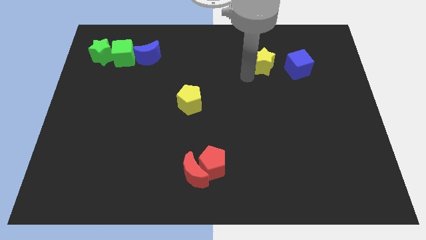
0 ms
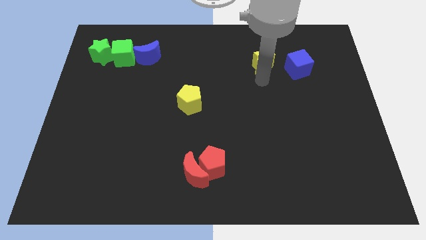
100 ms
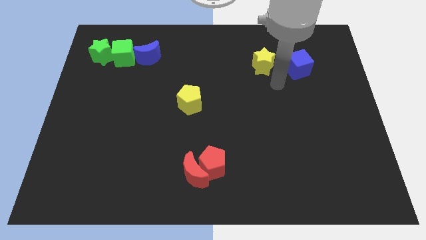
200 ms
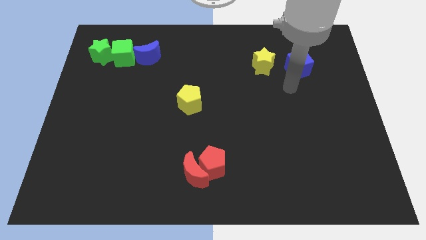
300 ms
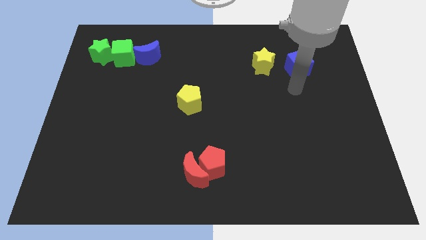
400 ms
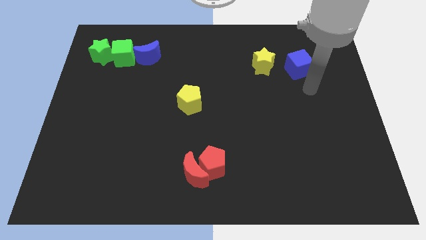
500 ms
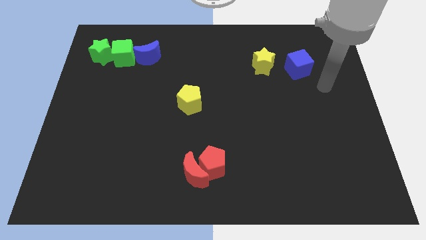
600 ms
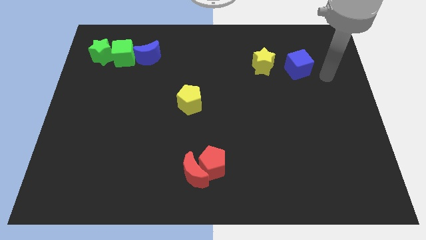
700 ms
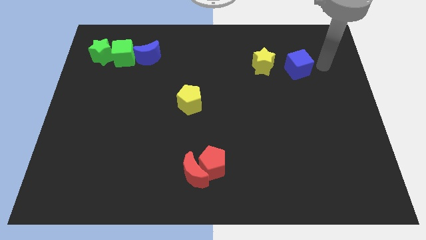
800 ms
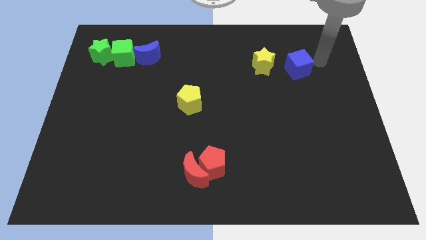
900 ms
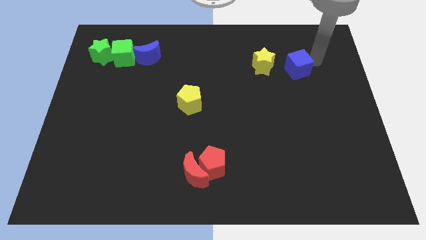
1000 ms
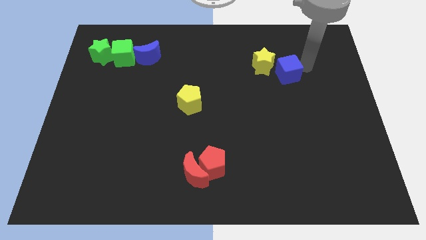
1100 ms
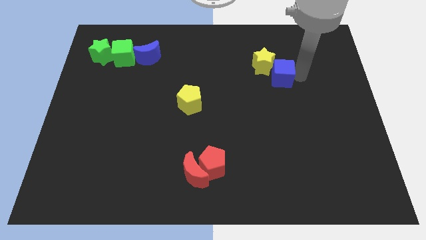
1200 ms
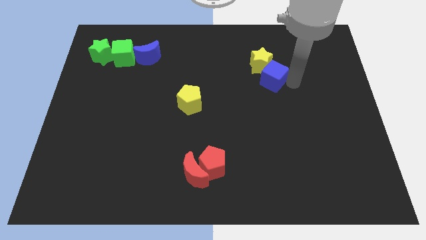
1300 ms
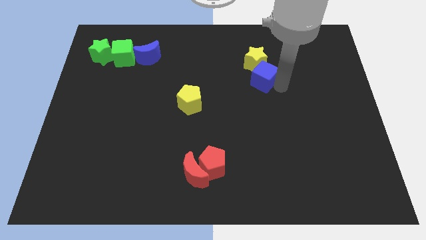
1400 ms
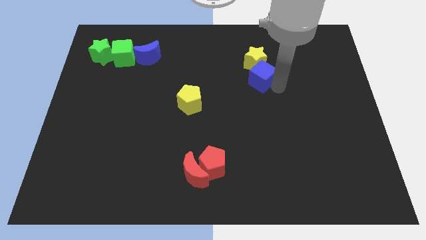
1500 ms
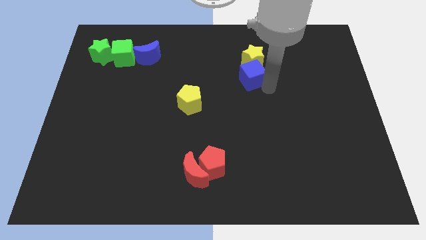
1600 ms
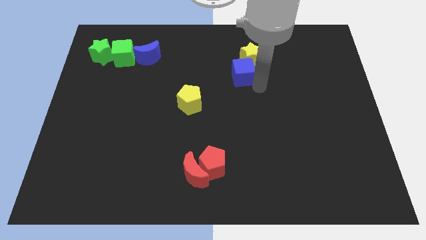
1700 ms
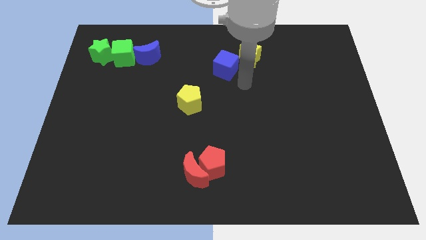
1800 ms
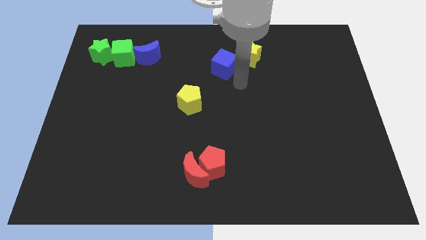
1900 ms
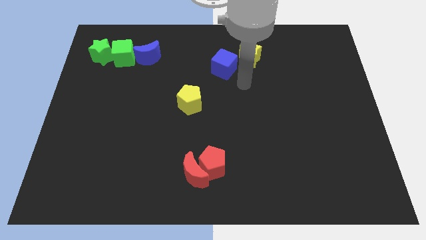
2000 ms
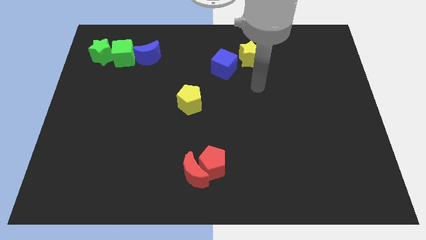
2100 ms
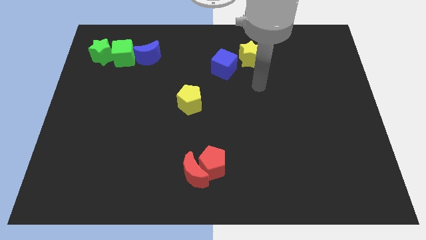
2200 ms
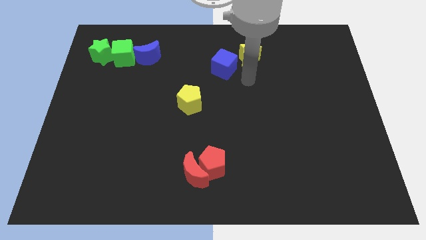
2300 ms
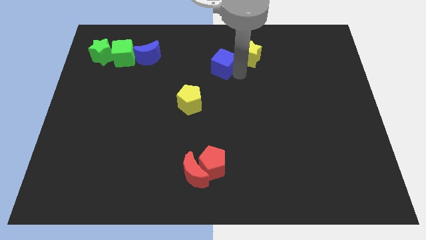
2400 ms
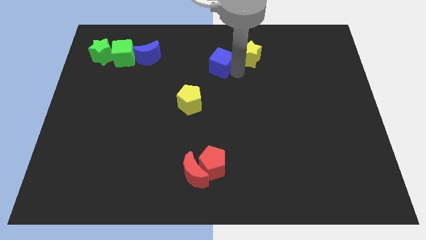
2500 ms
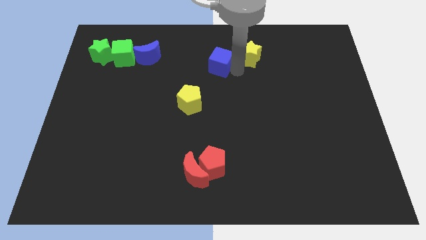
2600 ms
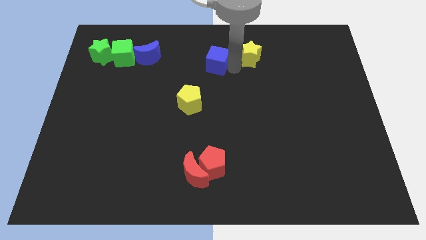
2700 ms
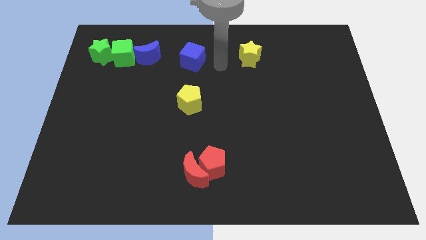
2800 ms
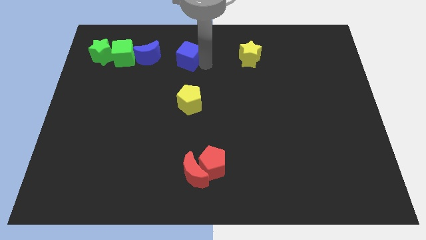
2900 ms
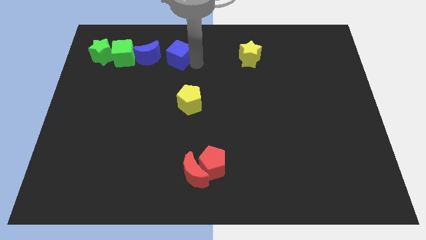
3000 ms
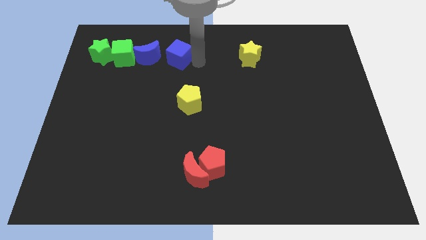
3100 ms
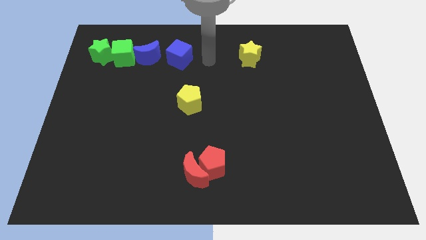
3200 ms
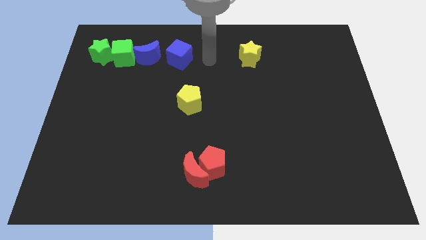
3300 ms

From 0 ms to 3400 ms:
place the blue cube beside the blue moon

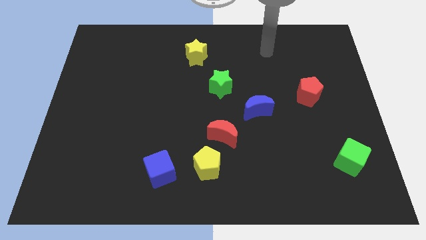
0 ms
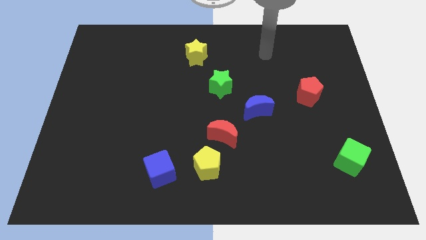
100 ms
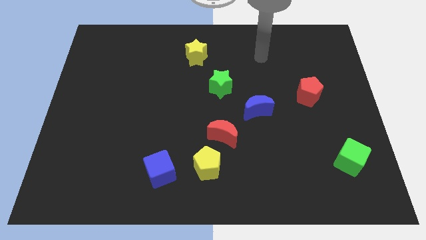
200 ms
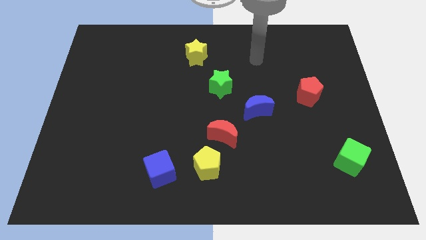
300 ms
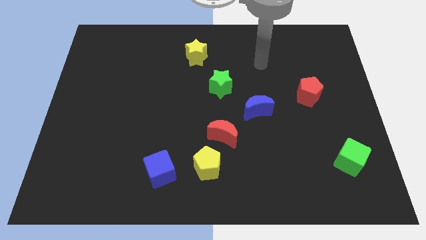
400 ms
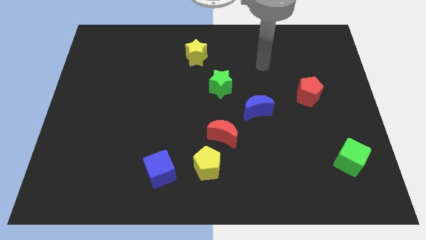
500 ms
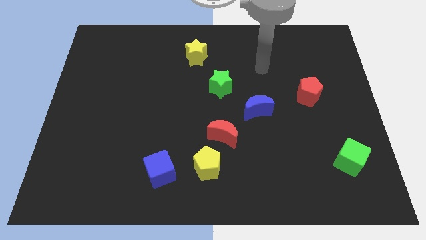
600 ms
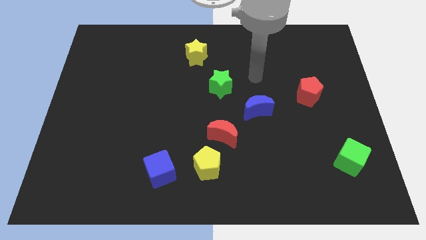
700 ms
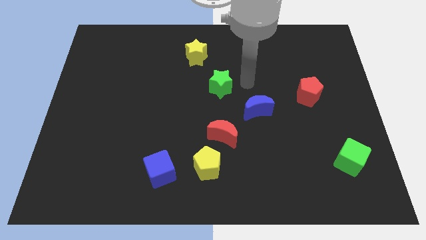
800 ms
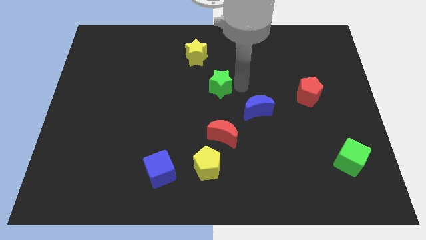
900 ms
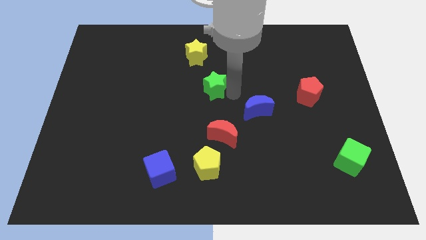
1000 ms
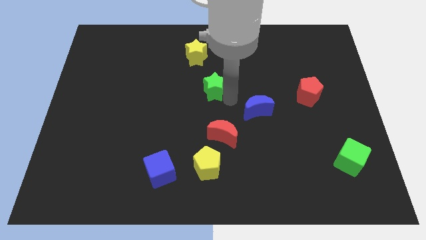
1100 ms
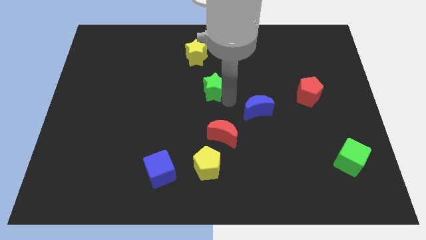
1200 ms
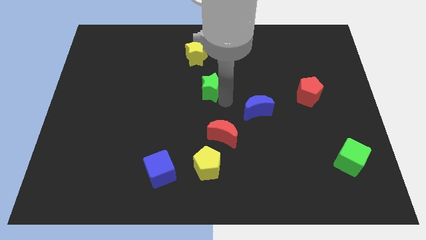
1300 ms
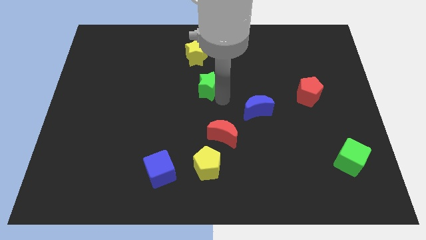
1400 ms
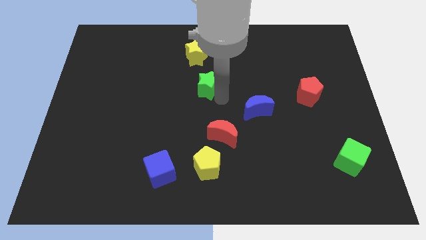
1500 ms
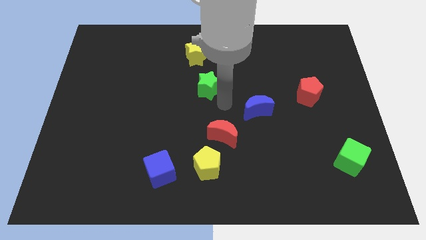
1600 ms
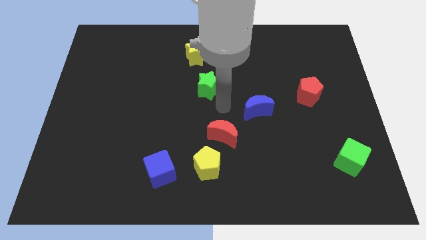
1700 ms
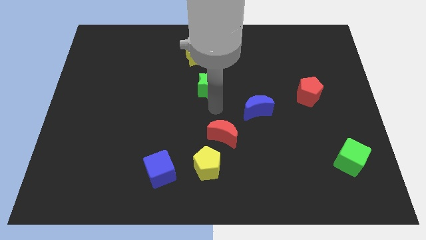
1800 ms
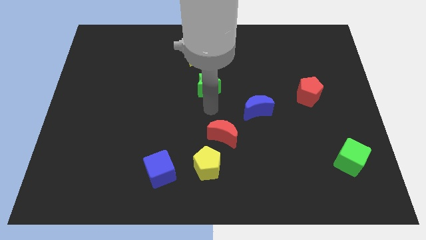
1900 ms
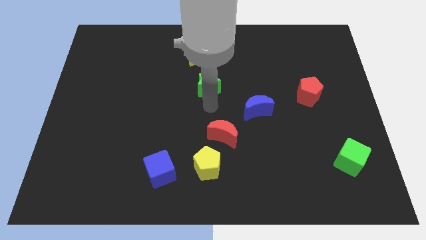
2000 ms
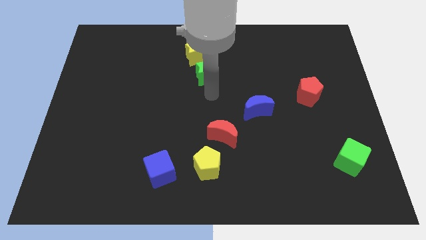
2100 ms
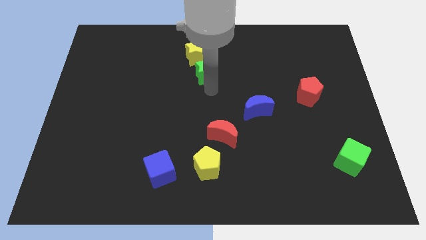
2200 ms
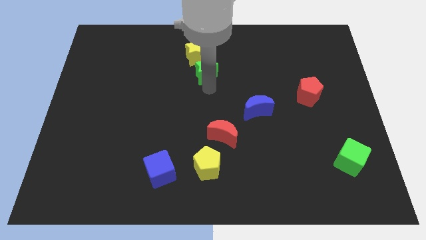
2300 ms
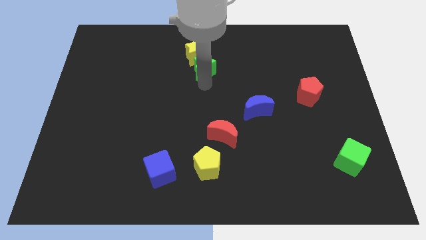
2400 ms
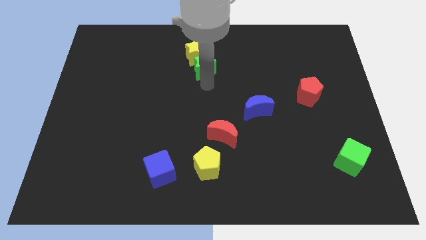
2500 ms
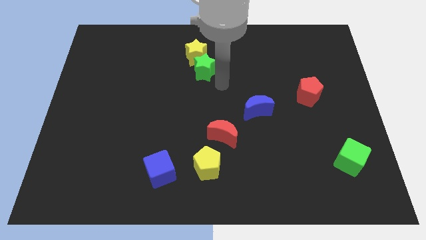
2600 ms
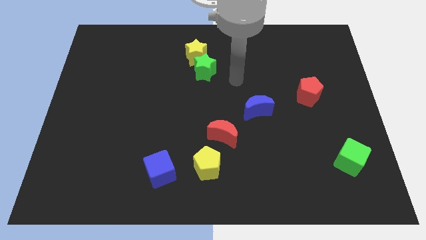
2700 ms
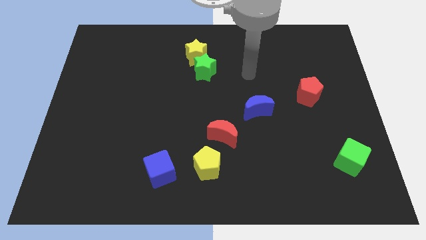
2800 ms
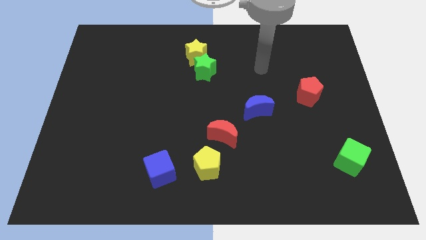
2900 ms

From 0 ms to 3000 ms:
push the green star to the bottom of the yellow star

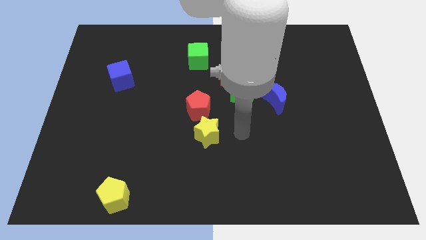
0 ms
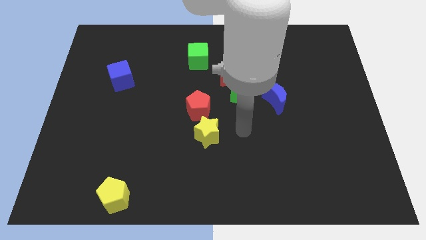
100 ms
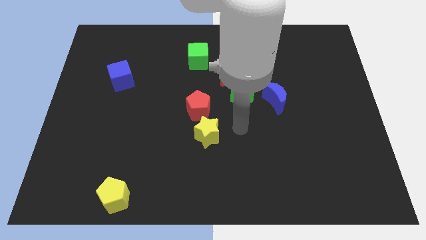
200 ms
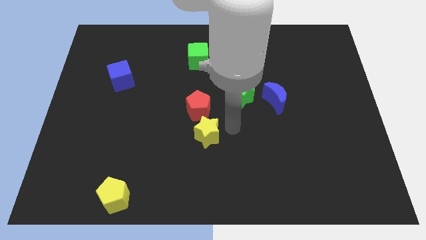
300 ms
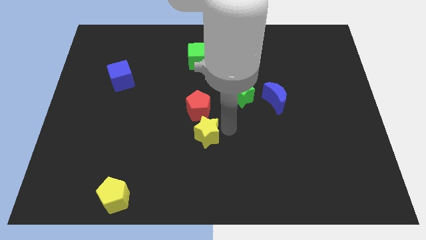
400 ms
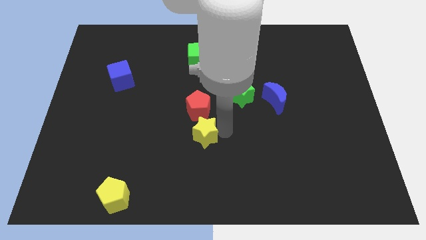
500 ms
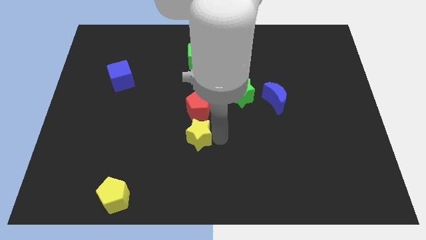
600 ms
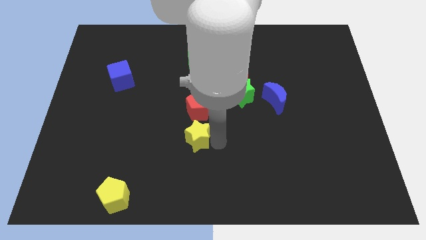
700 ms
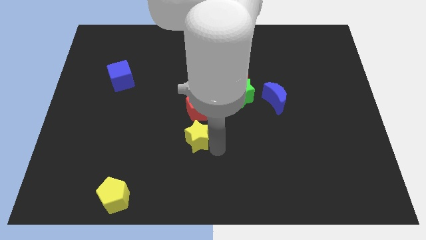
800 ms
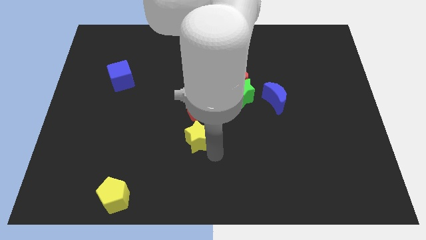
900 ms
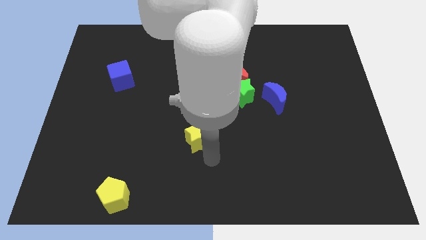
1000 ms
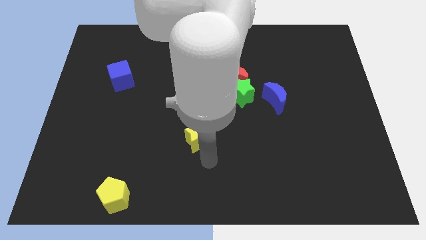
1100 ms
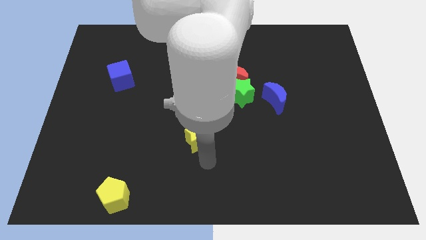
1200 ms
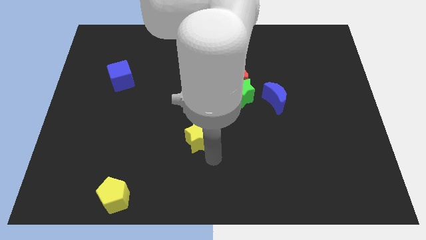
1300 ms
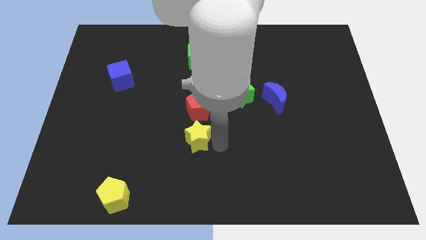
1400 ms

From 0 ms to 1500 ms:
move the yellow star slightly to the left

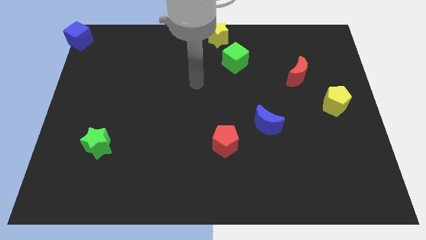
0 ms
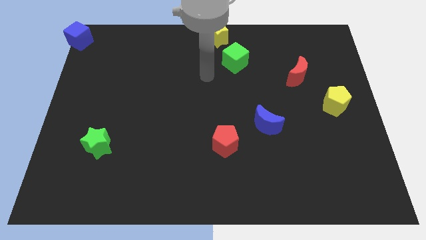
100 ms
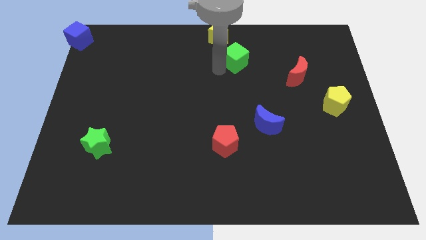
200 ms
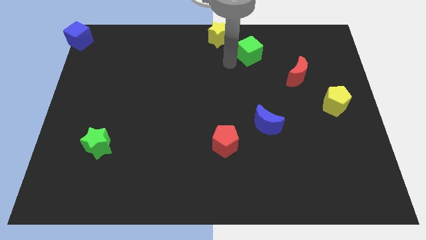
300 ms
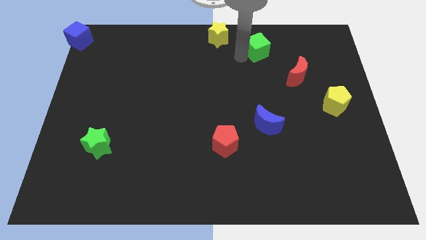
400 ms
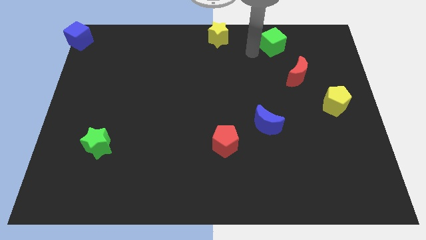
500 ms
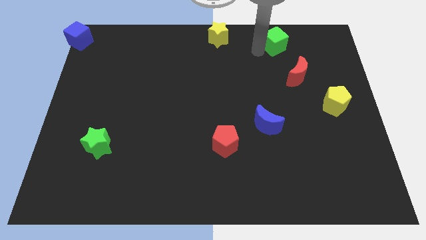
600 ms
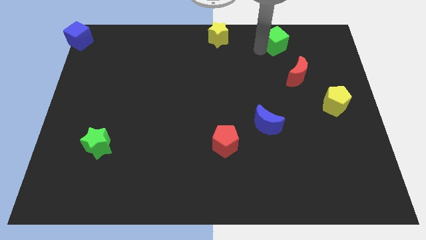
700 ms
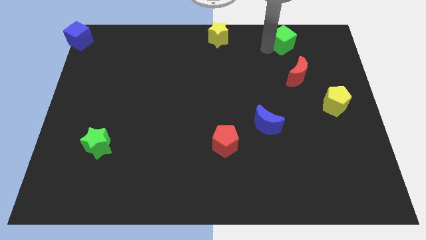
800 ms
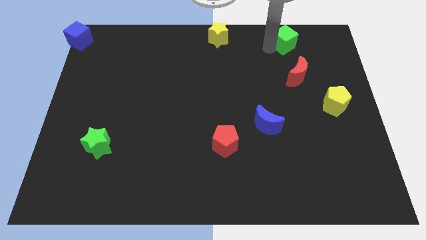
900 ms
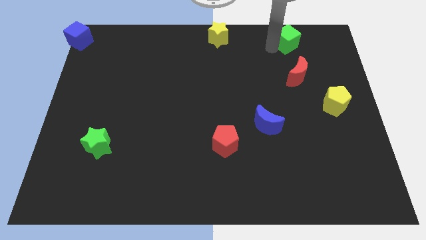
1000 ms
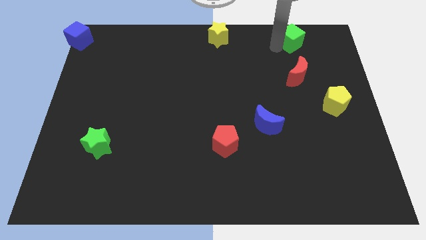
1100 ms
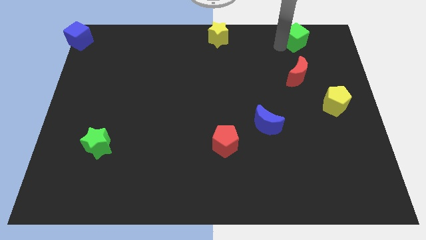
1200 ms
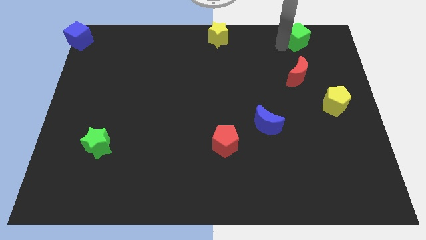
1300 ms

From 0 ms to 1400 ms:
move the green cube to the top of the red crescent
